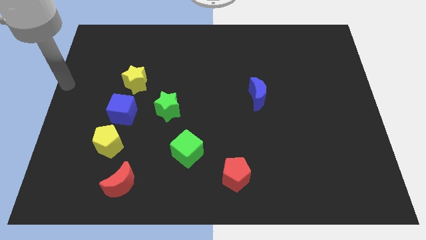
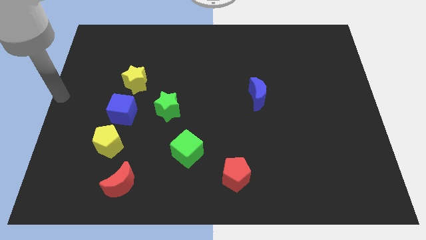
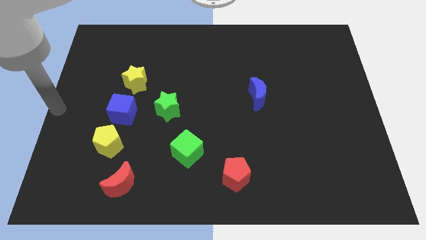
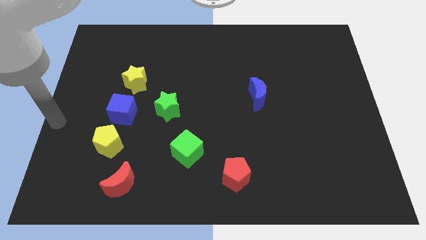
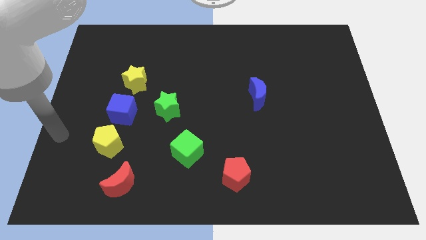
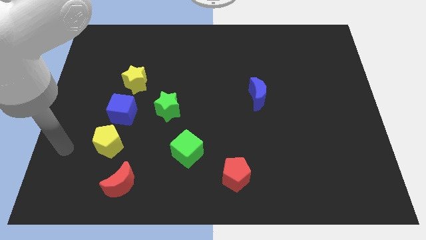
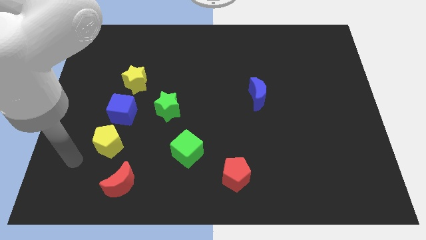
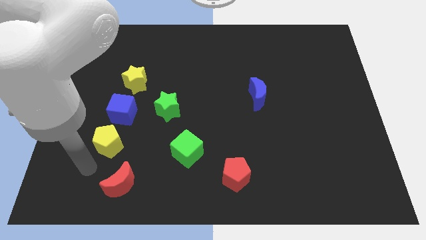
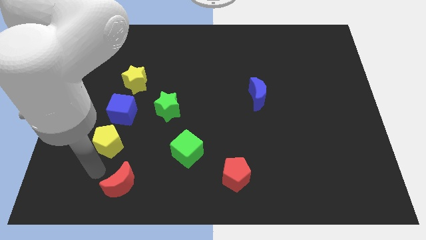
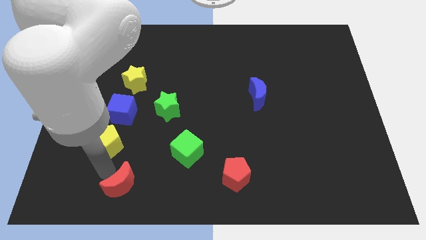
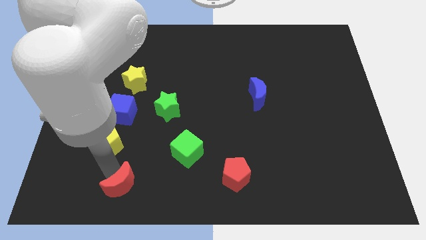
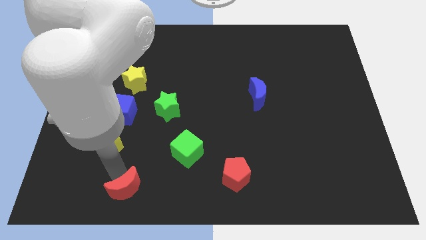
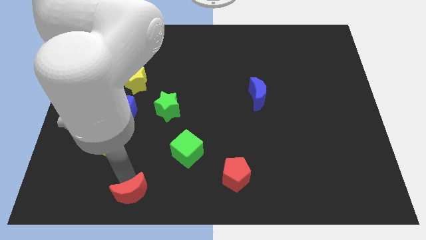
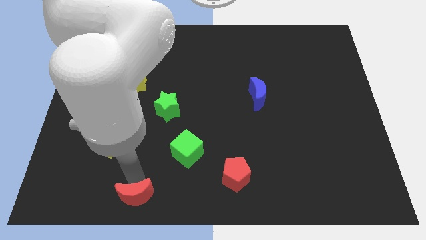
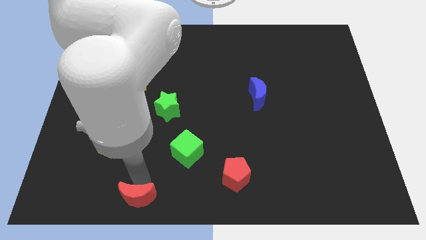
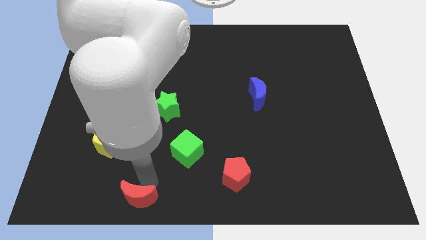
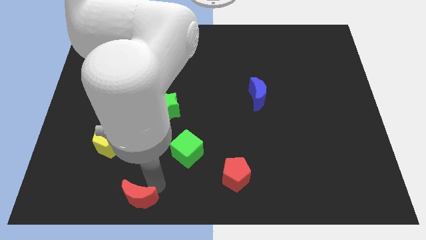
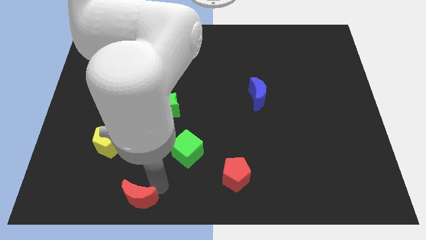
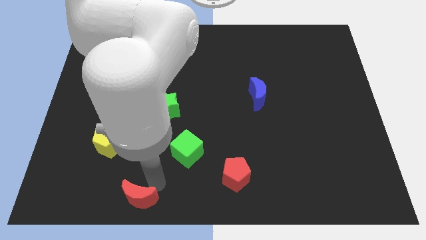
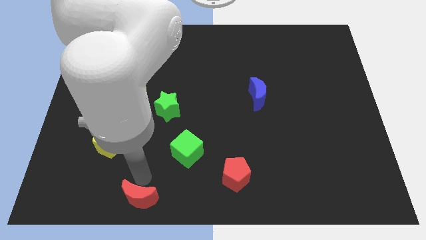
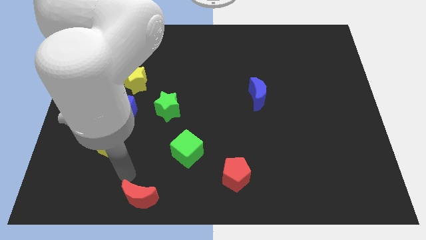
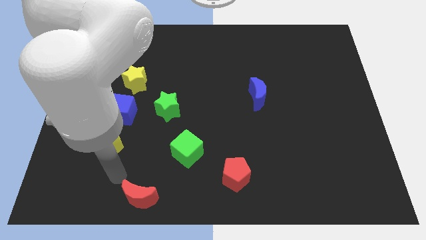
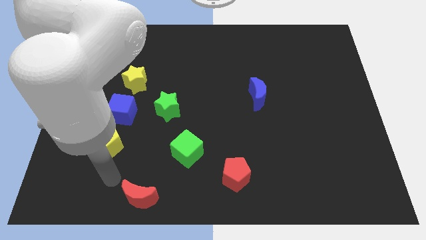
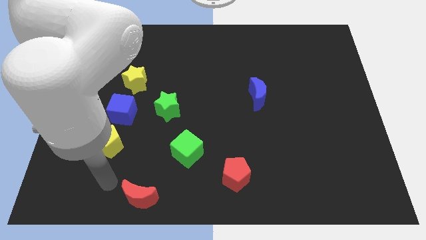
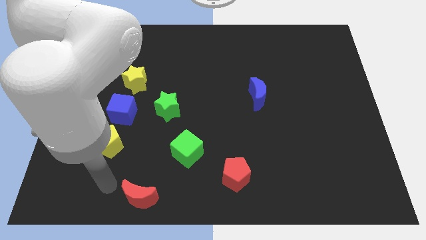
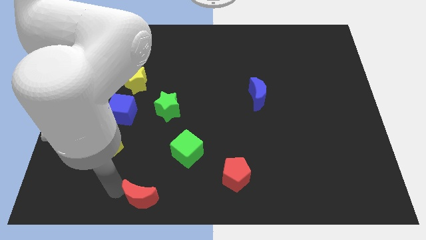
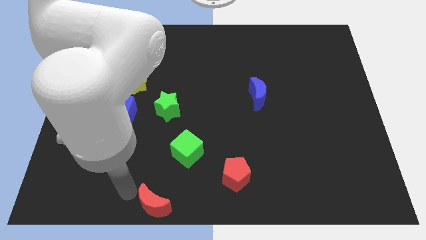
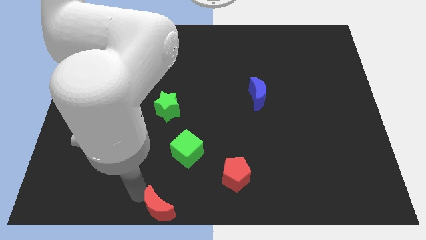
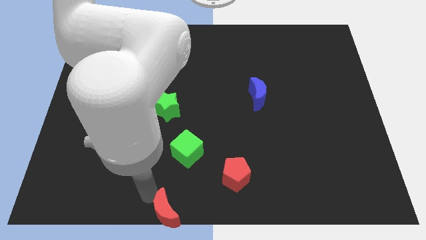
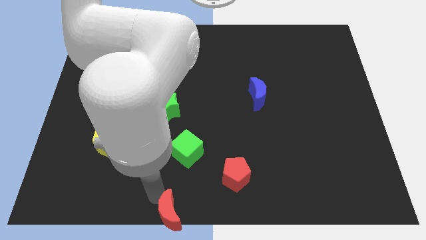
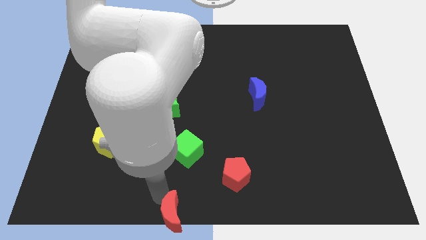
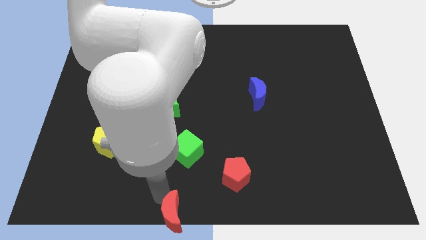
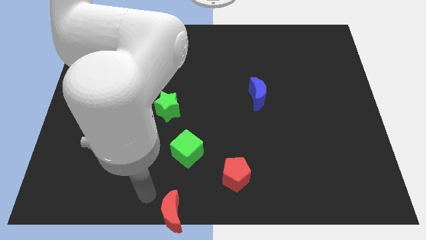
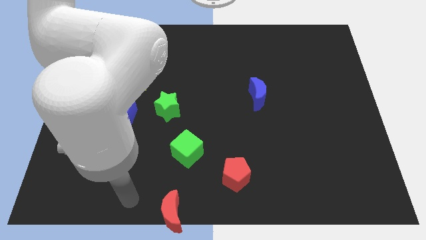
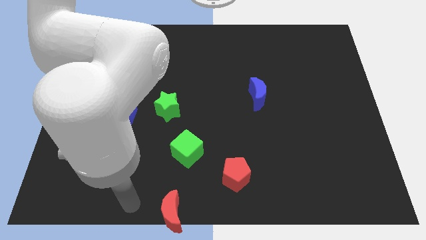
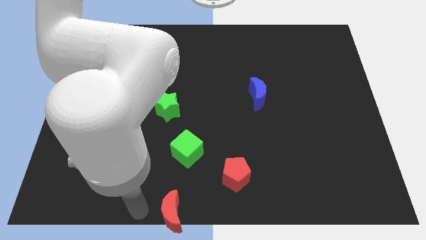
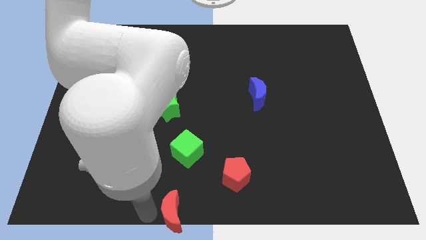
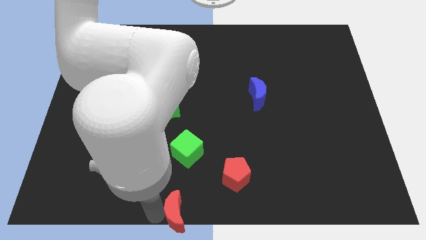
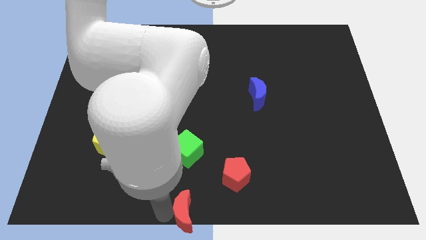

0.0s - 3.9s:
push red crescent below green cube

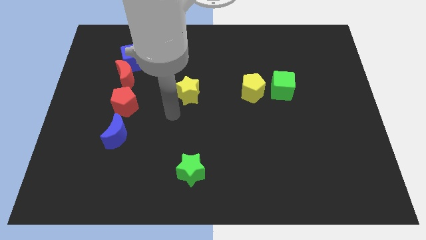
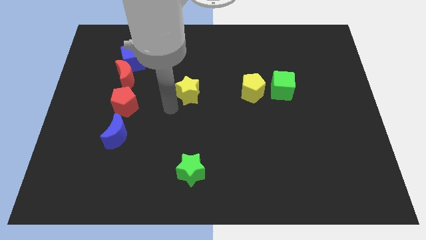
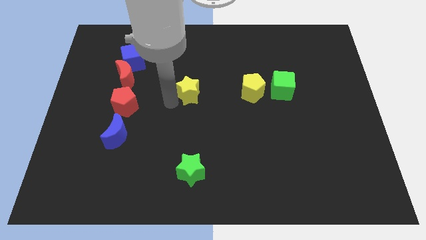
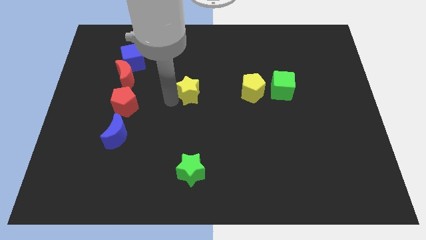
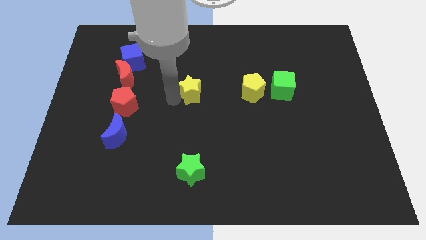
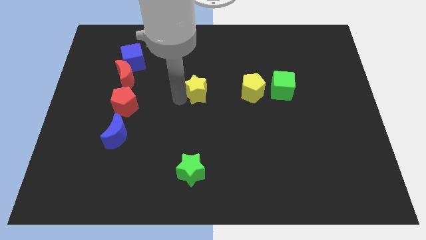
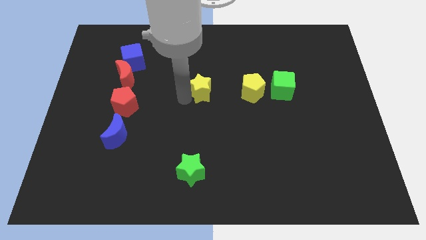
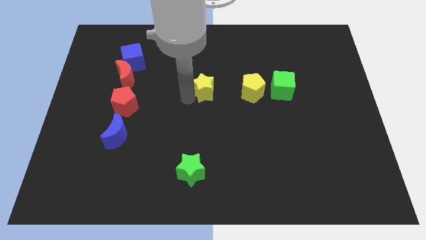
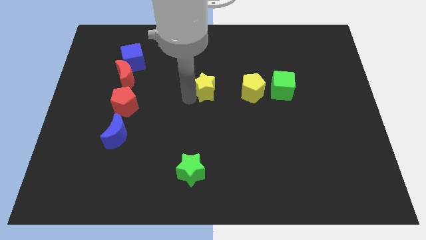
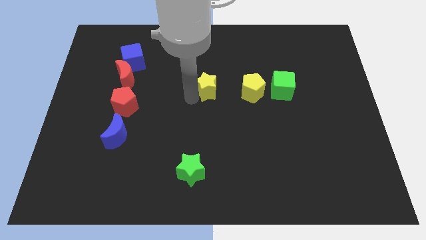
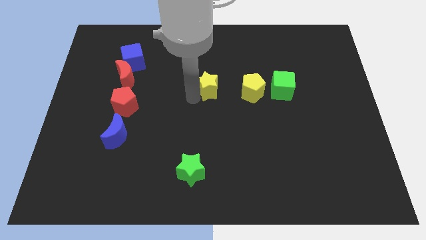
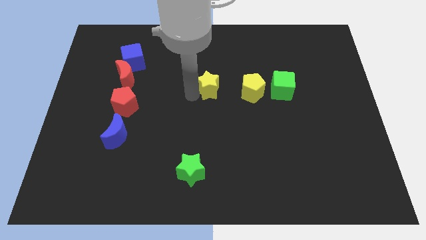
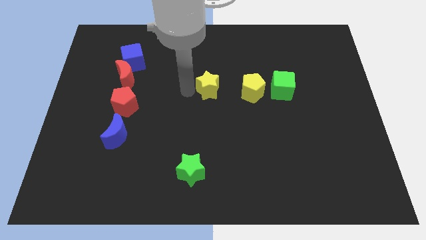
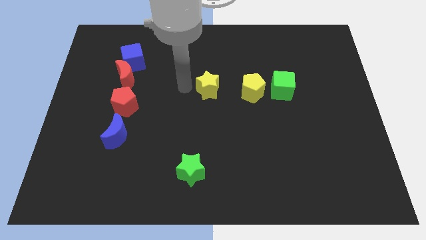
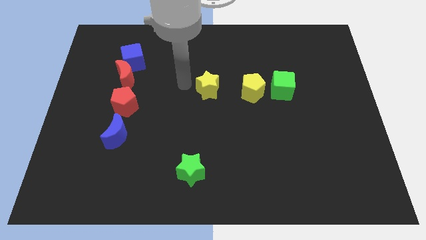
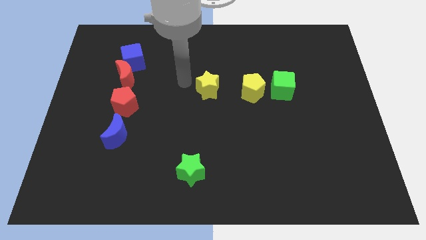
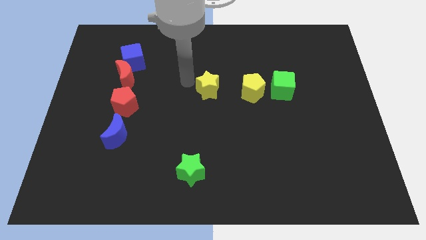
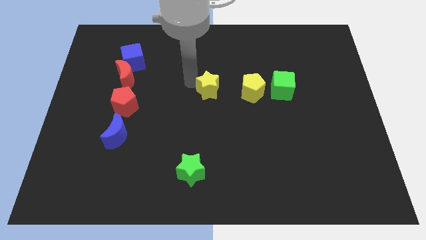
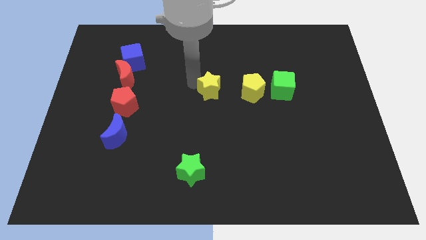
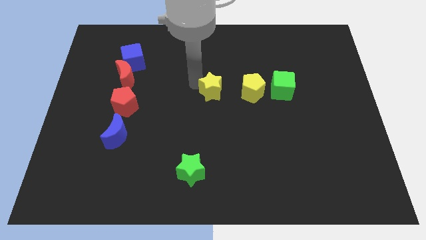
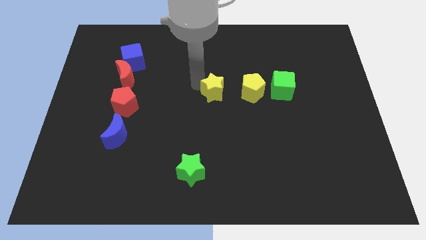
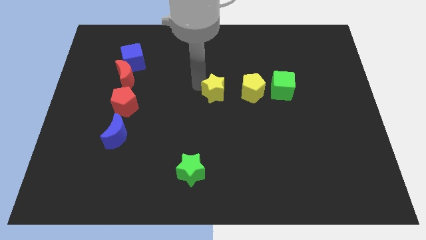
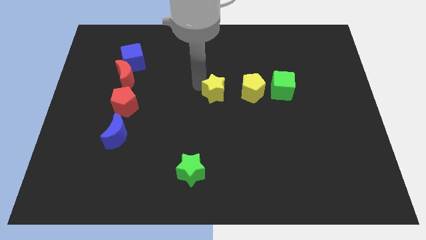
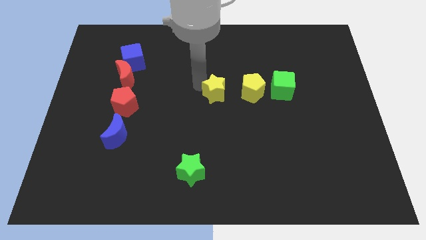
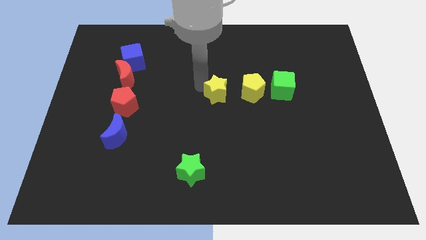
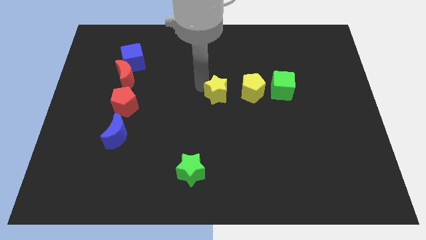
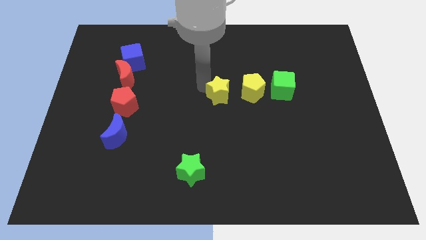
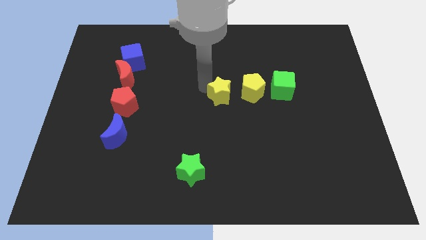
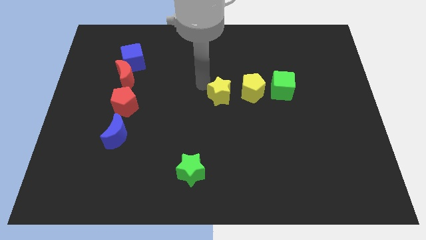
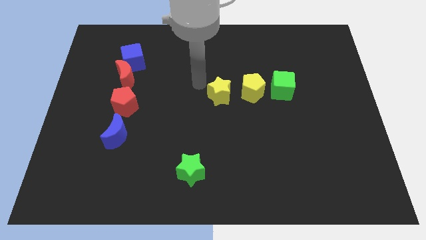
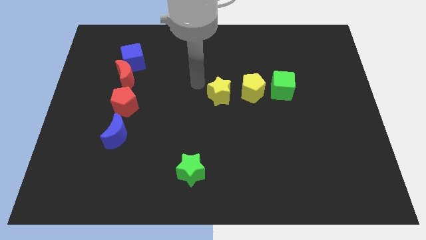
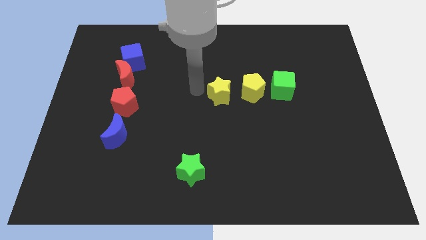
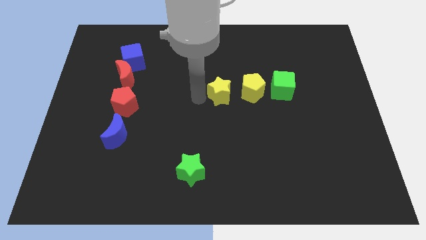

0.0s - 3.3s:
place the yellow star close to the yellow pentagon

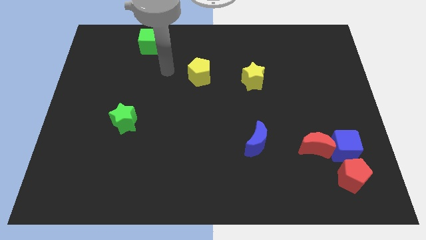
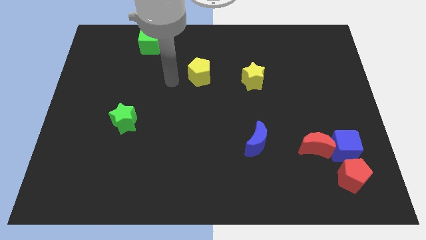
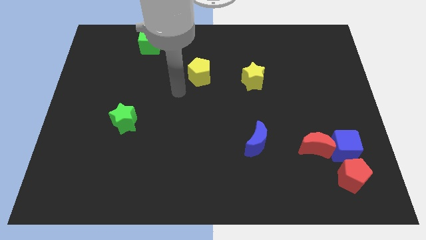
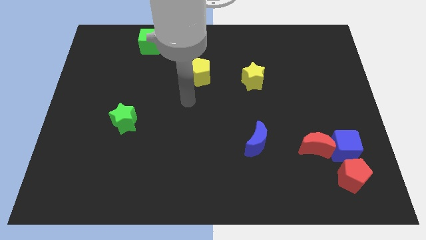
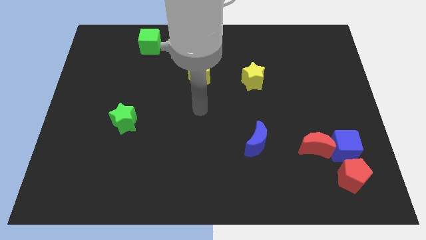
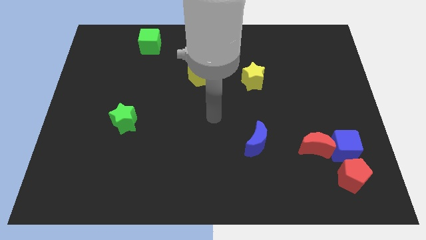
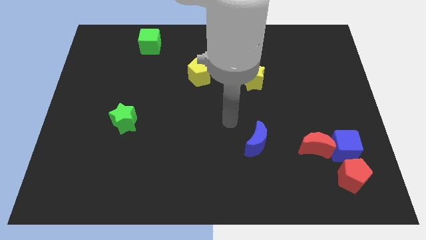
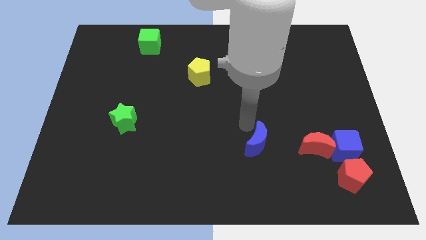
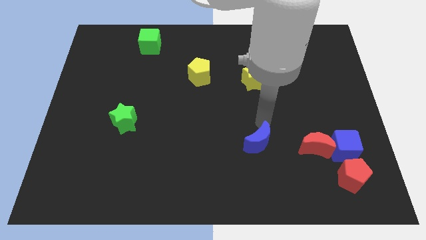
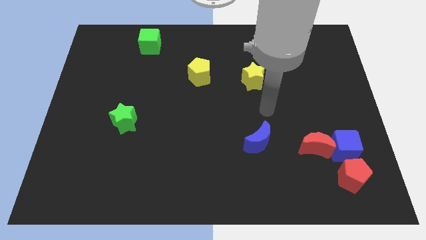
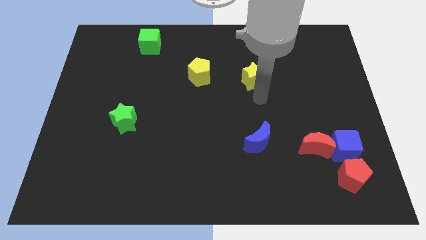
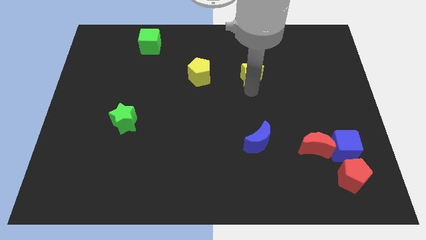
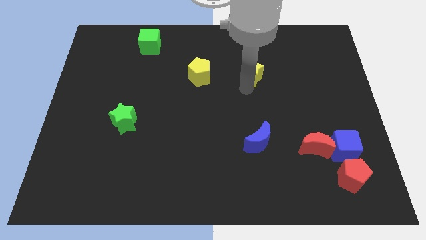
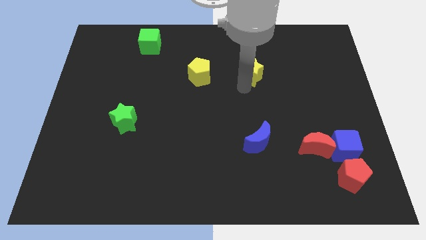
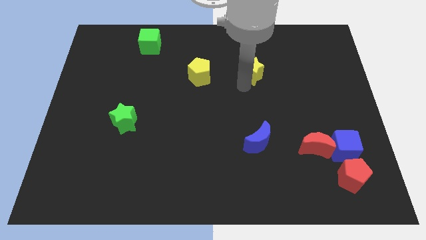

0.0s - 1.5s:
slightly touch the blue moon

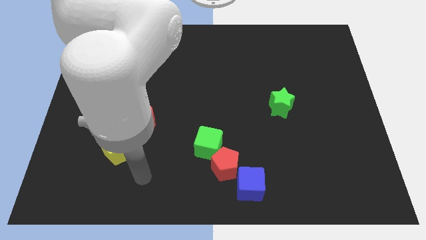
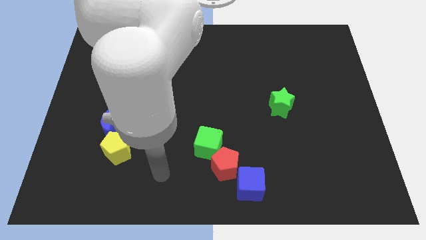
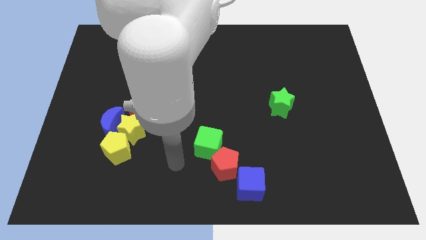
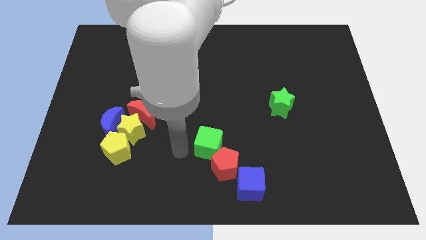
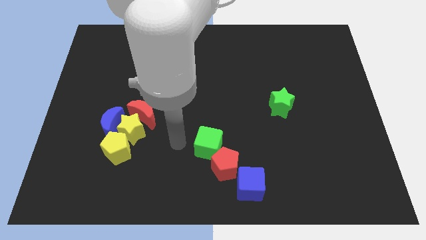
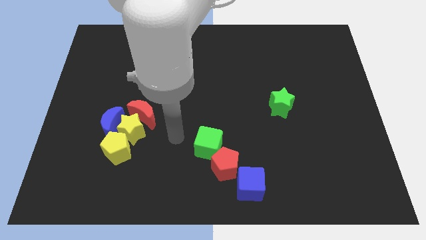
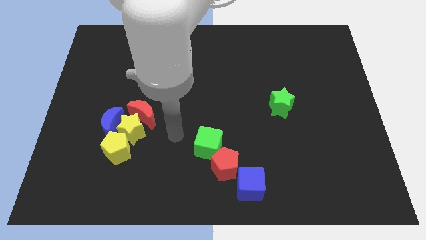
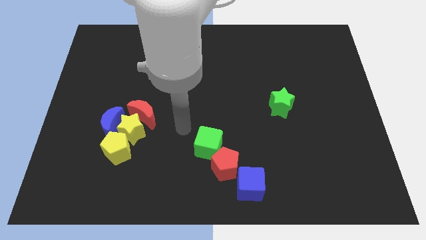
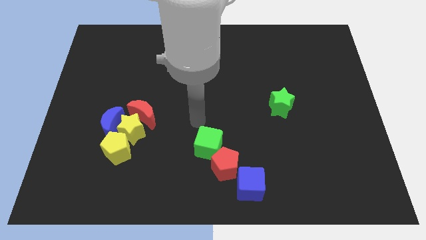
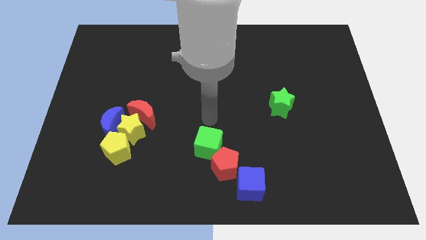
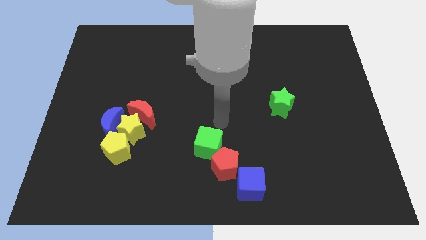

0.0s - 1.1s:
move your arm on top of the green cube
